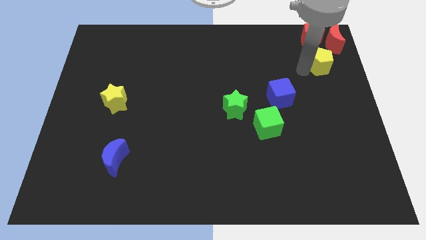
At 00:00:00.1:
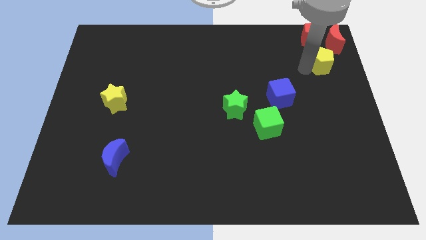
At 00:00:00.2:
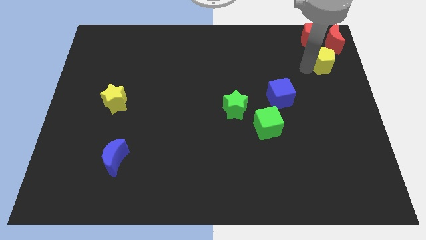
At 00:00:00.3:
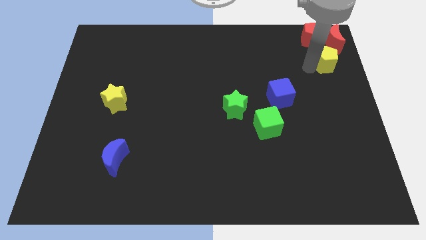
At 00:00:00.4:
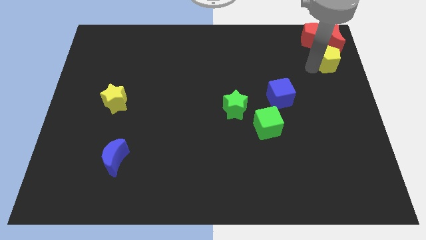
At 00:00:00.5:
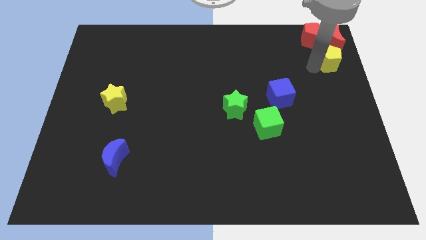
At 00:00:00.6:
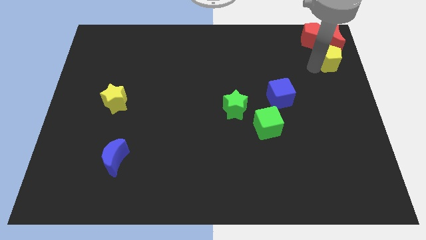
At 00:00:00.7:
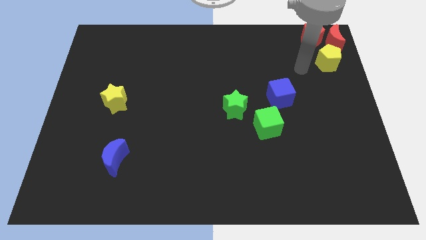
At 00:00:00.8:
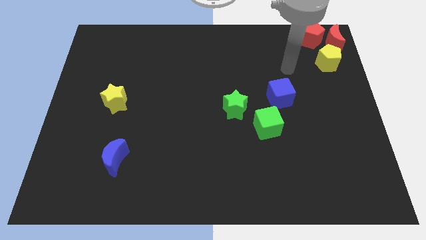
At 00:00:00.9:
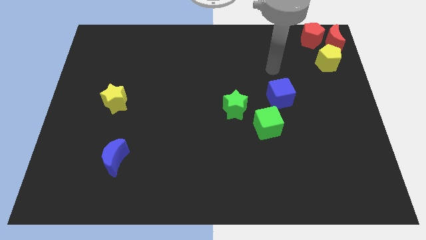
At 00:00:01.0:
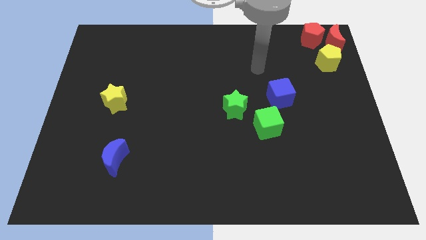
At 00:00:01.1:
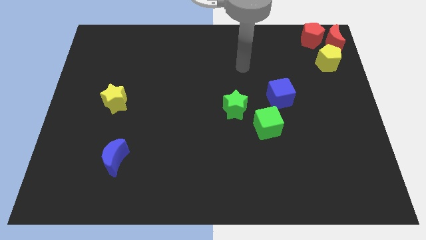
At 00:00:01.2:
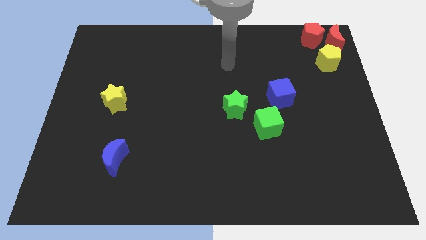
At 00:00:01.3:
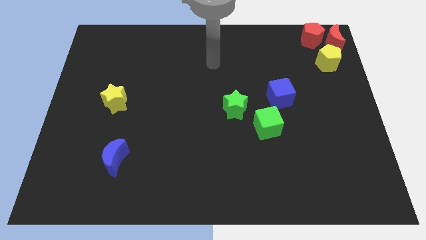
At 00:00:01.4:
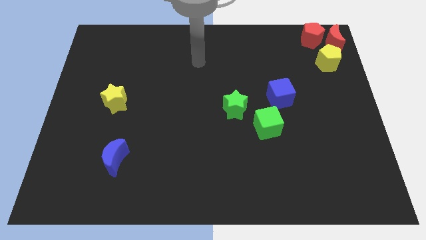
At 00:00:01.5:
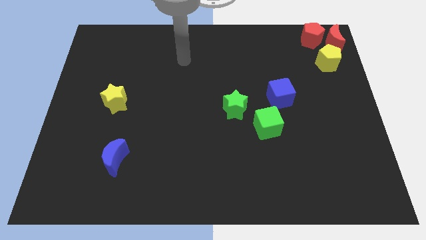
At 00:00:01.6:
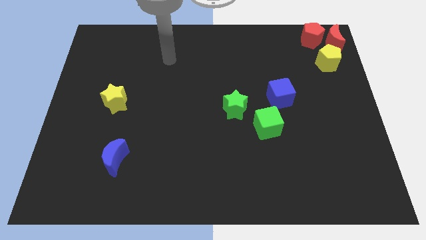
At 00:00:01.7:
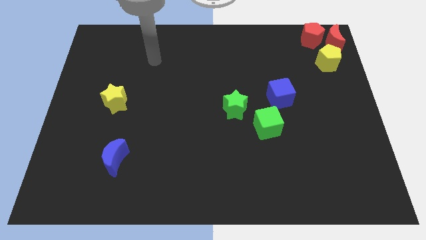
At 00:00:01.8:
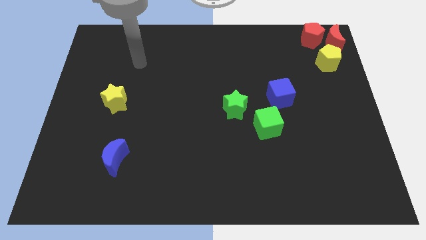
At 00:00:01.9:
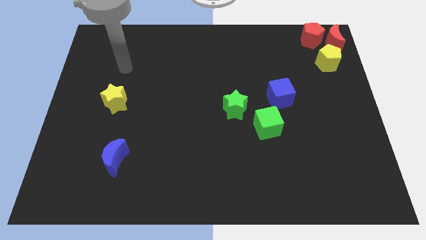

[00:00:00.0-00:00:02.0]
place the yellow pentagon close to the red moon

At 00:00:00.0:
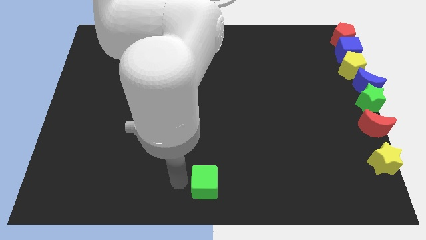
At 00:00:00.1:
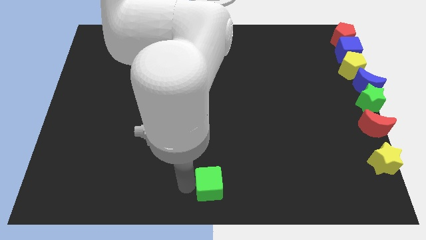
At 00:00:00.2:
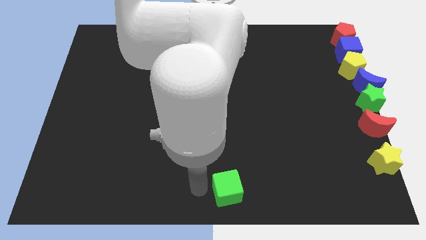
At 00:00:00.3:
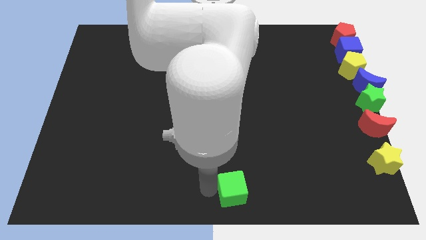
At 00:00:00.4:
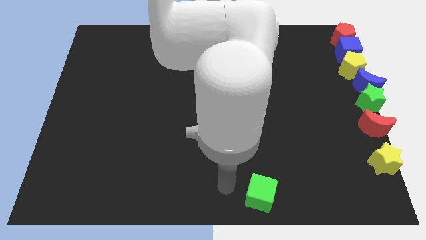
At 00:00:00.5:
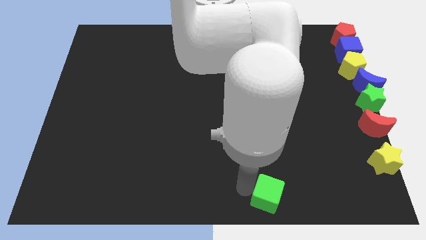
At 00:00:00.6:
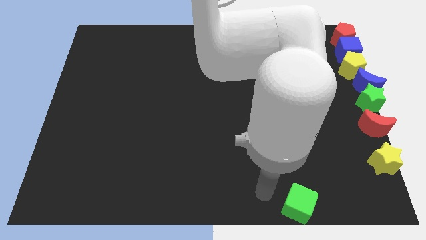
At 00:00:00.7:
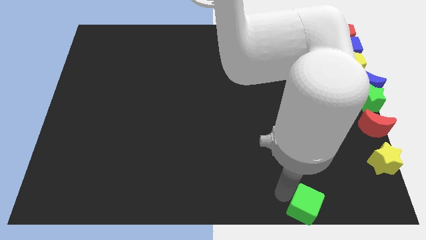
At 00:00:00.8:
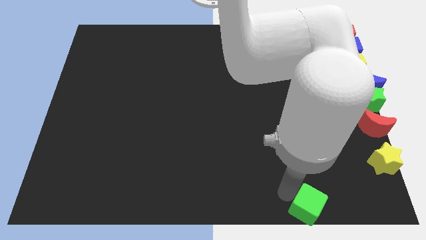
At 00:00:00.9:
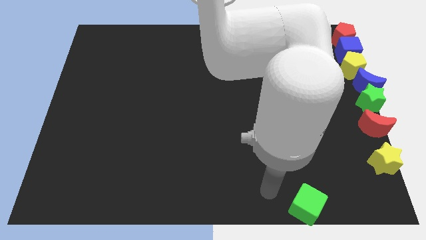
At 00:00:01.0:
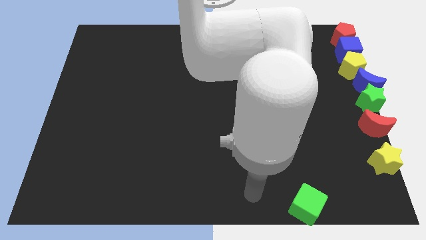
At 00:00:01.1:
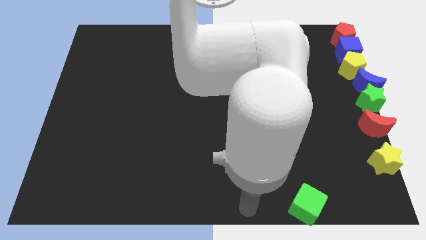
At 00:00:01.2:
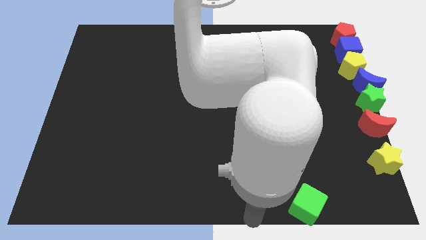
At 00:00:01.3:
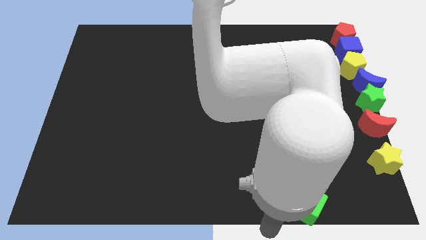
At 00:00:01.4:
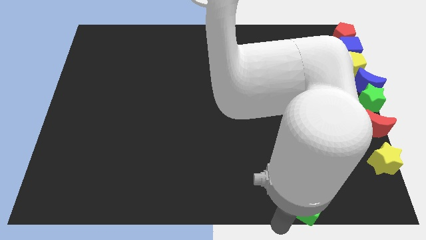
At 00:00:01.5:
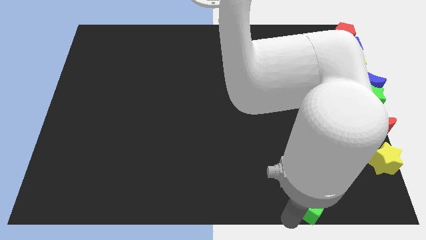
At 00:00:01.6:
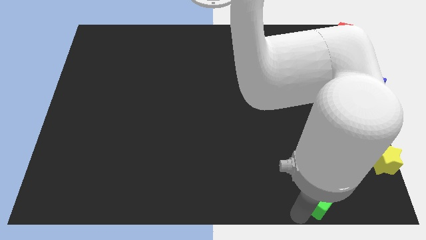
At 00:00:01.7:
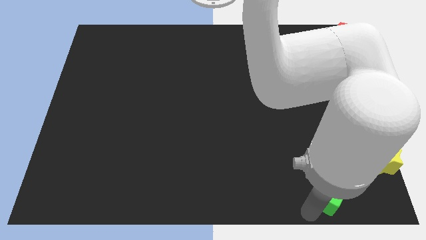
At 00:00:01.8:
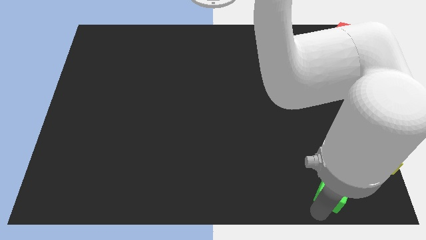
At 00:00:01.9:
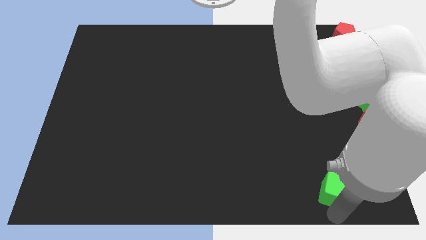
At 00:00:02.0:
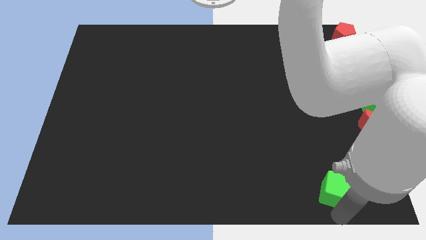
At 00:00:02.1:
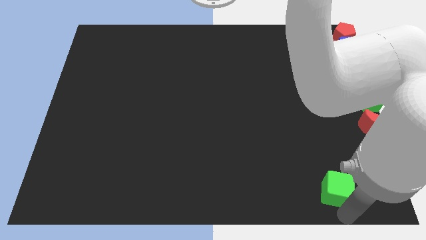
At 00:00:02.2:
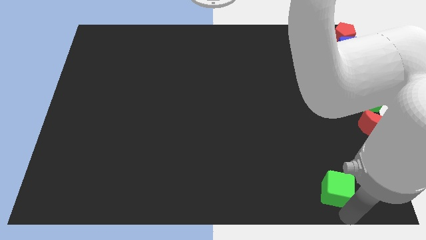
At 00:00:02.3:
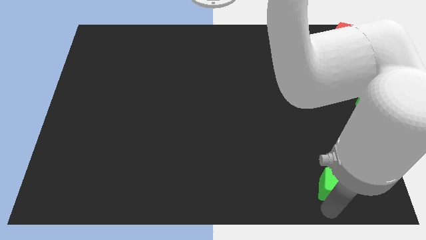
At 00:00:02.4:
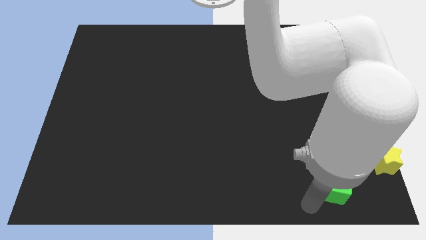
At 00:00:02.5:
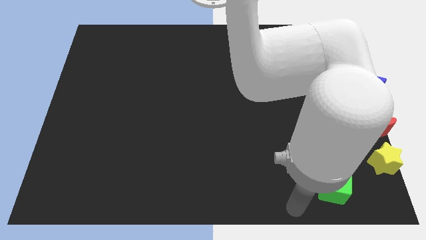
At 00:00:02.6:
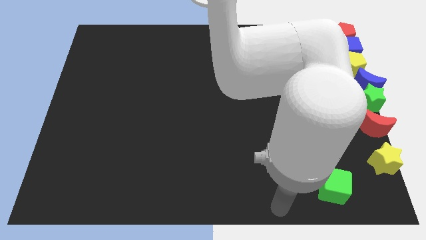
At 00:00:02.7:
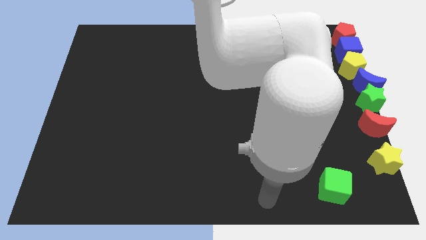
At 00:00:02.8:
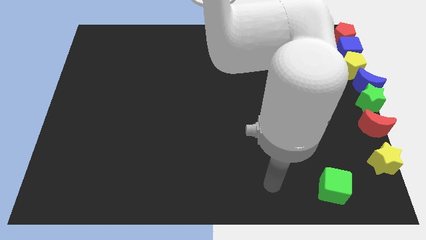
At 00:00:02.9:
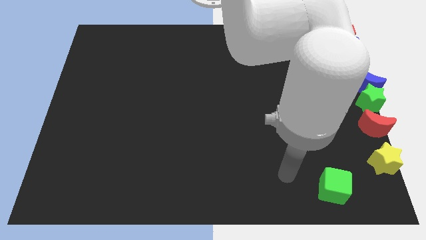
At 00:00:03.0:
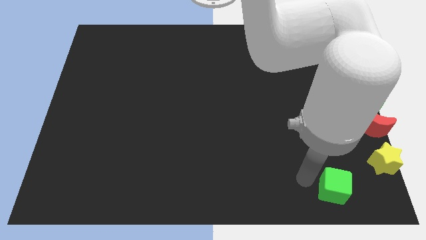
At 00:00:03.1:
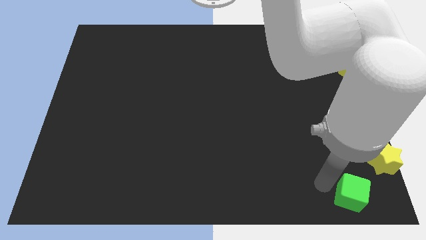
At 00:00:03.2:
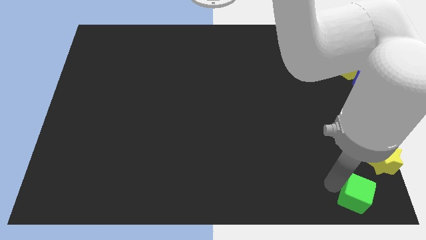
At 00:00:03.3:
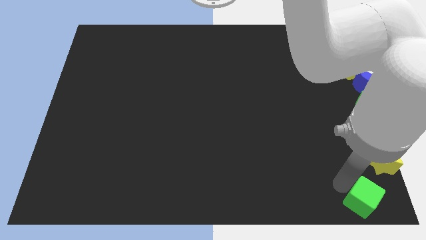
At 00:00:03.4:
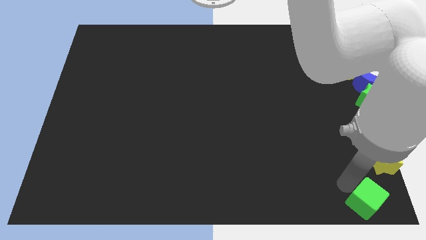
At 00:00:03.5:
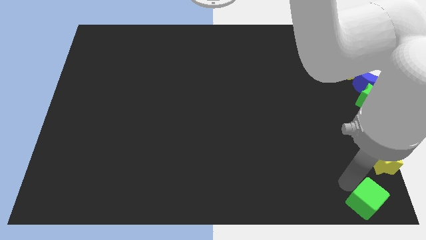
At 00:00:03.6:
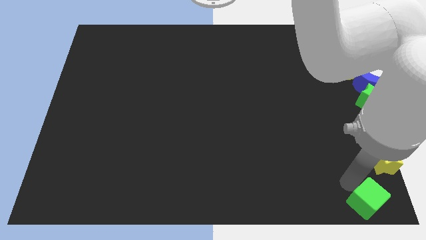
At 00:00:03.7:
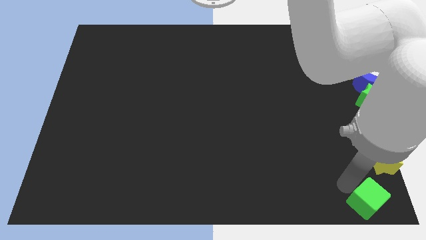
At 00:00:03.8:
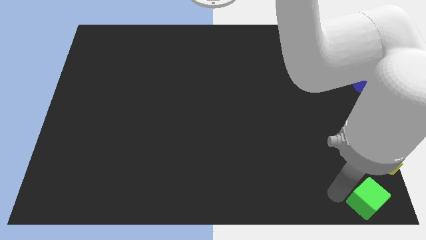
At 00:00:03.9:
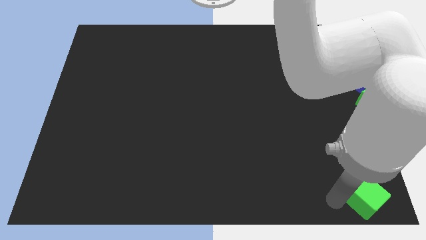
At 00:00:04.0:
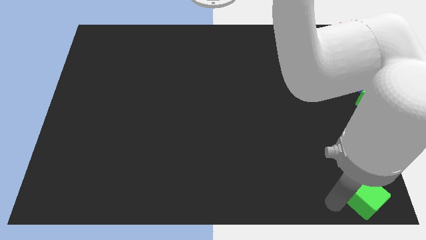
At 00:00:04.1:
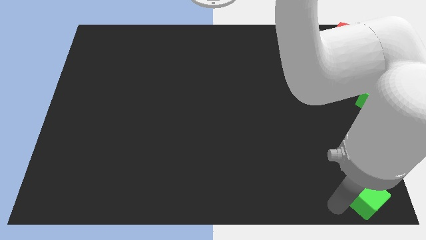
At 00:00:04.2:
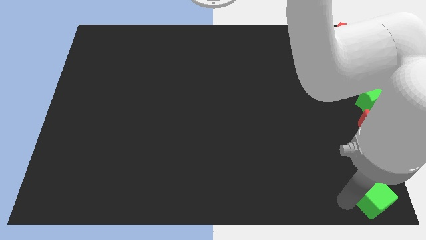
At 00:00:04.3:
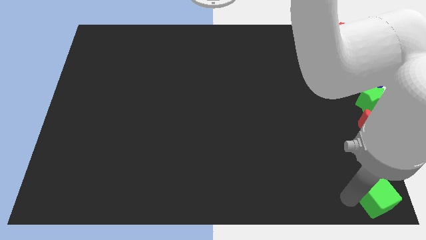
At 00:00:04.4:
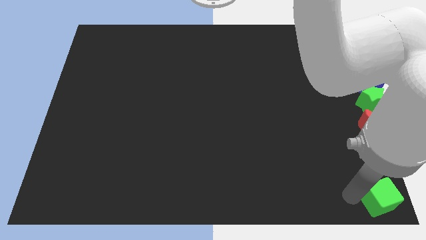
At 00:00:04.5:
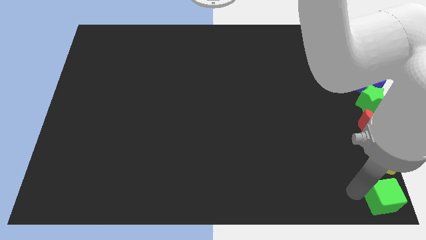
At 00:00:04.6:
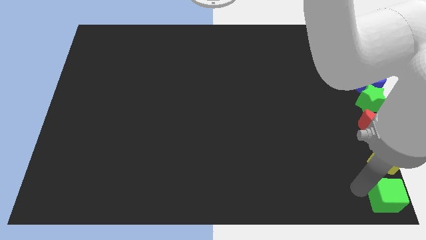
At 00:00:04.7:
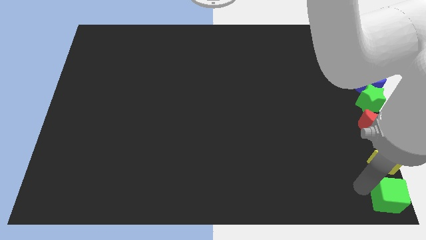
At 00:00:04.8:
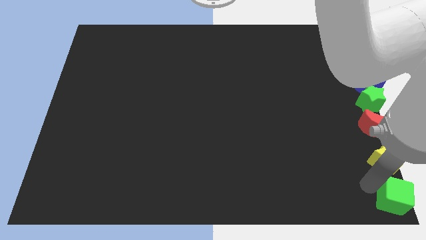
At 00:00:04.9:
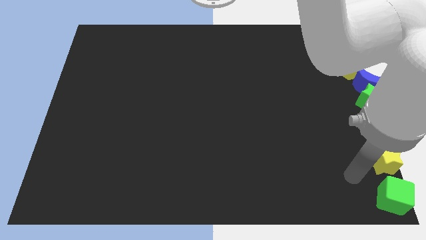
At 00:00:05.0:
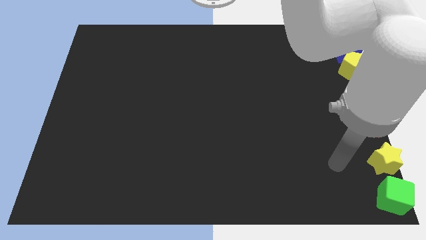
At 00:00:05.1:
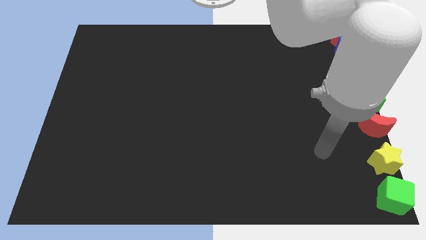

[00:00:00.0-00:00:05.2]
slide the green cube to the bottom right corner of the board

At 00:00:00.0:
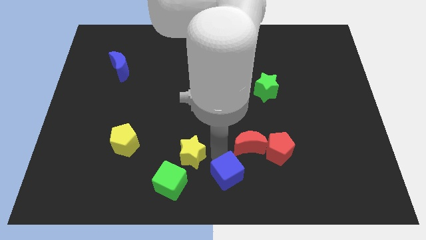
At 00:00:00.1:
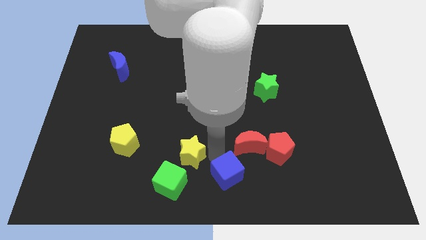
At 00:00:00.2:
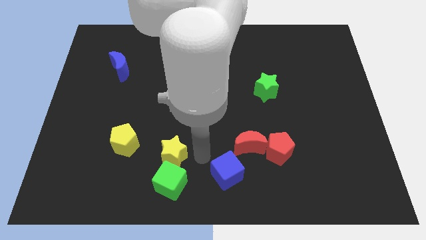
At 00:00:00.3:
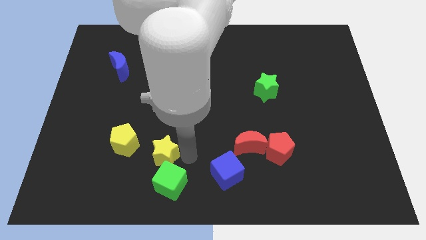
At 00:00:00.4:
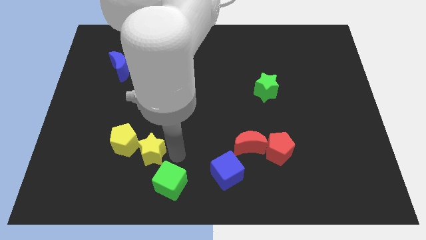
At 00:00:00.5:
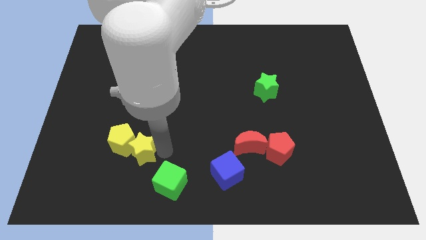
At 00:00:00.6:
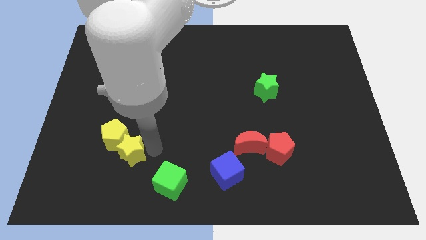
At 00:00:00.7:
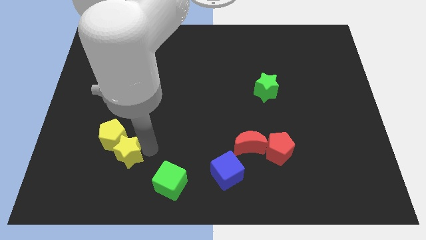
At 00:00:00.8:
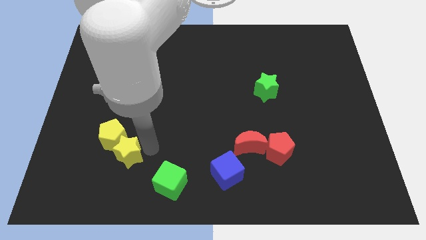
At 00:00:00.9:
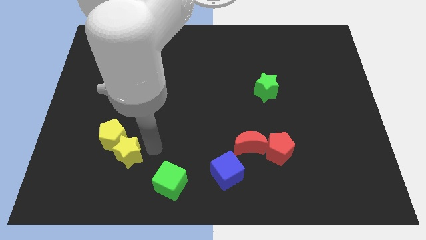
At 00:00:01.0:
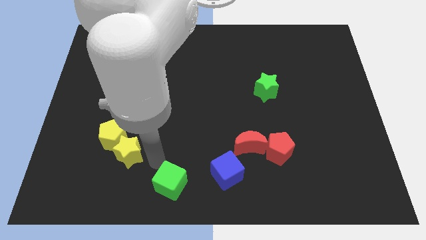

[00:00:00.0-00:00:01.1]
push the yellow star into the yellow pentagon

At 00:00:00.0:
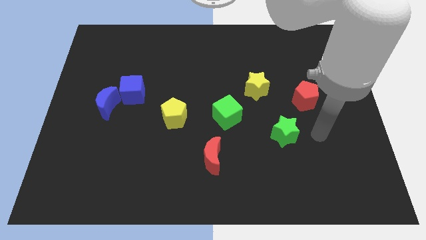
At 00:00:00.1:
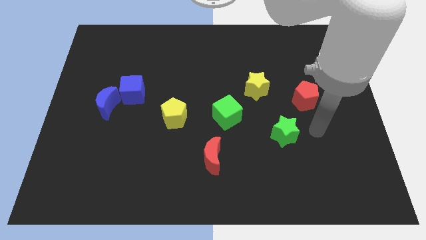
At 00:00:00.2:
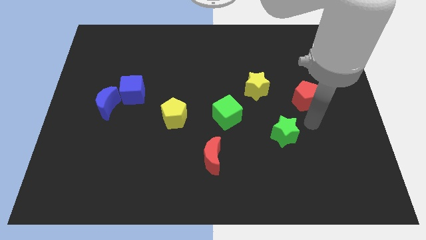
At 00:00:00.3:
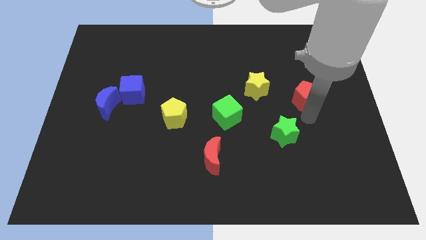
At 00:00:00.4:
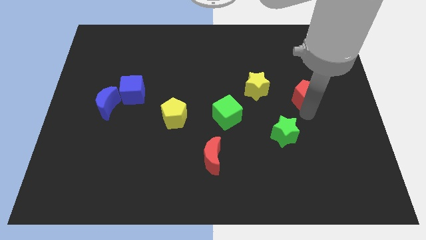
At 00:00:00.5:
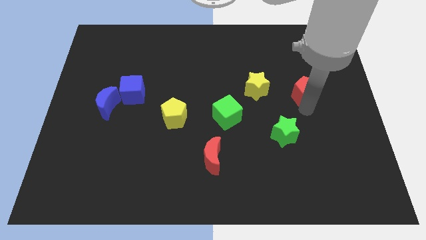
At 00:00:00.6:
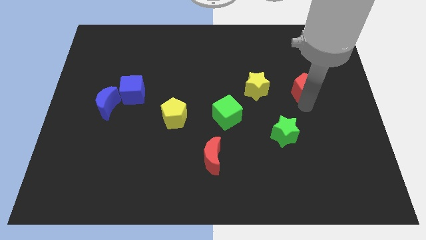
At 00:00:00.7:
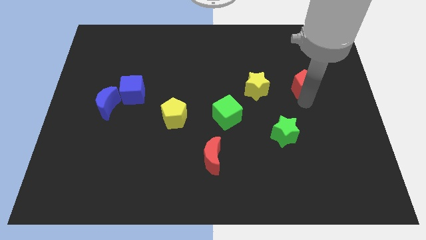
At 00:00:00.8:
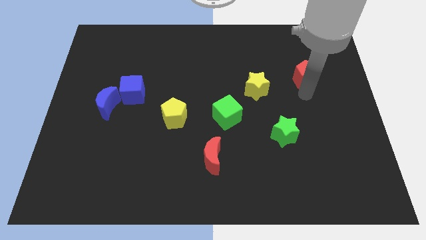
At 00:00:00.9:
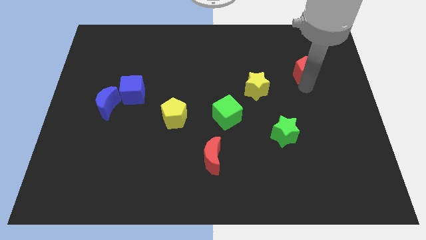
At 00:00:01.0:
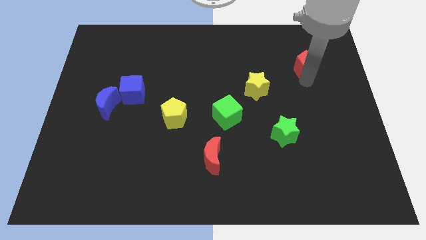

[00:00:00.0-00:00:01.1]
push red pentagon upwards
